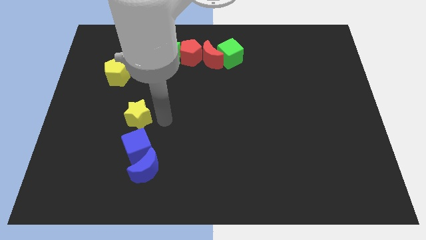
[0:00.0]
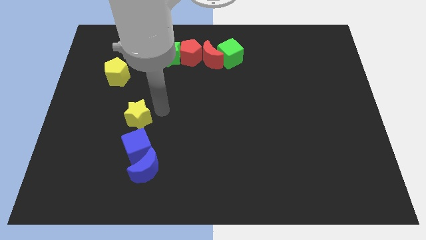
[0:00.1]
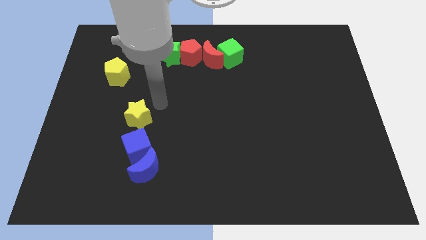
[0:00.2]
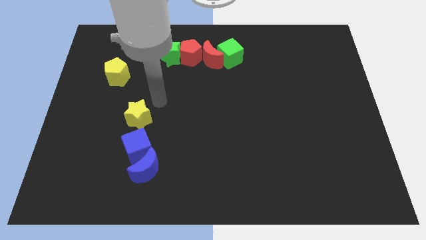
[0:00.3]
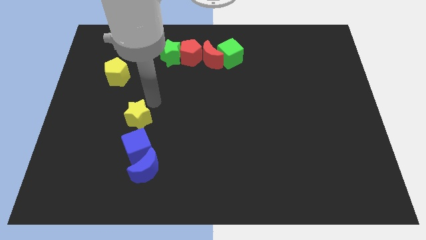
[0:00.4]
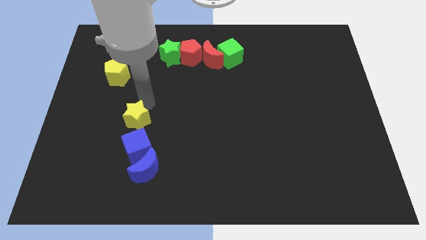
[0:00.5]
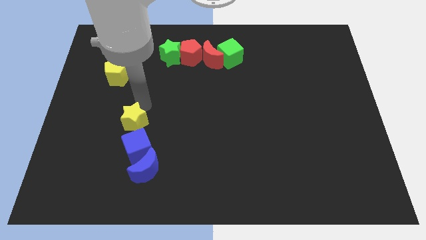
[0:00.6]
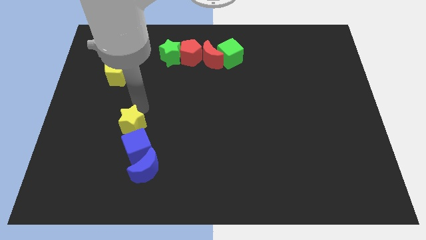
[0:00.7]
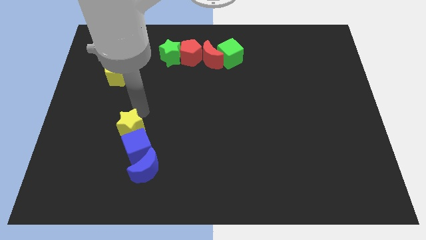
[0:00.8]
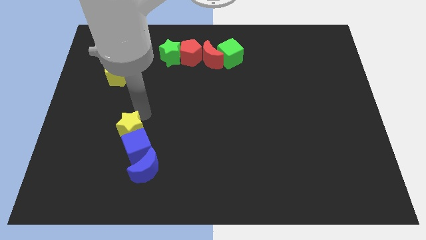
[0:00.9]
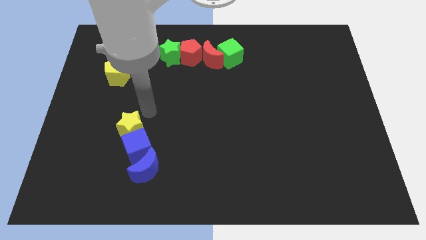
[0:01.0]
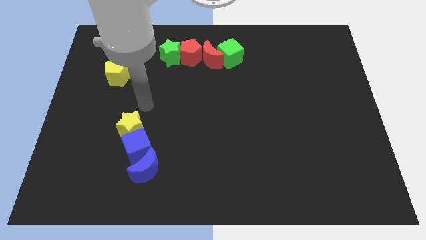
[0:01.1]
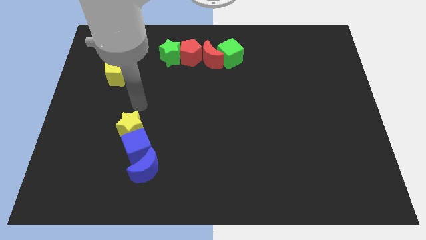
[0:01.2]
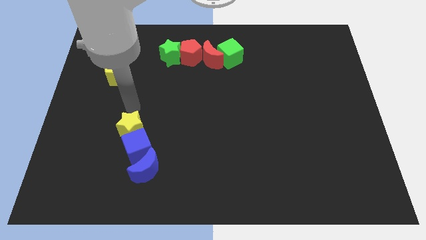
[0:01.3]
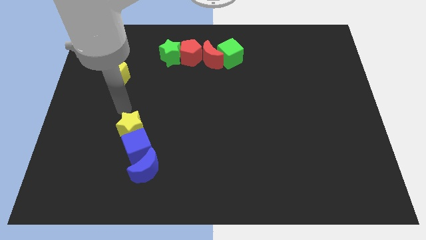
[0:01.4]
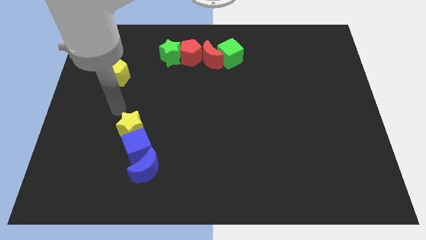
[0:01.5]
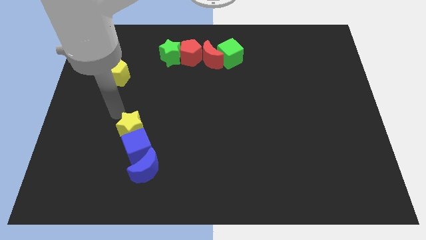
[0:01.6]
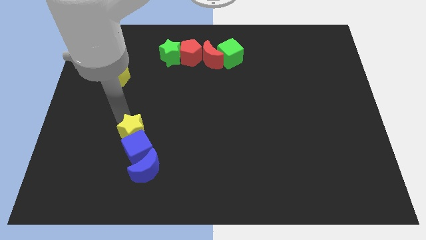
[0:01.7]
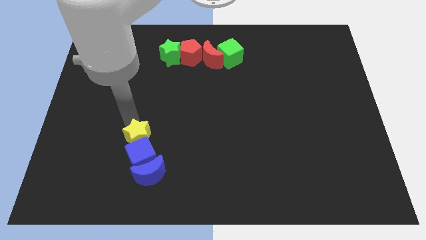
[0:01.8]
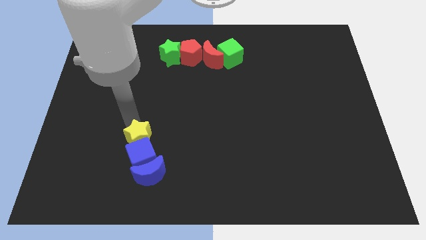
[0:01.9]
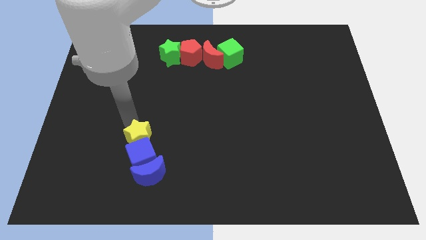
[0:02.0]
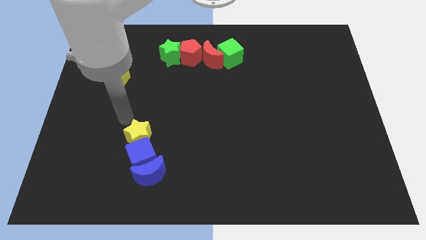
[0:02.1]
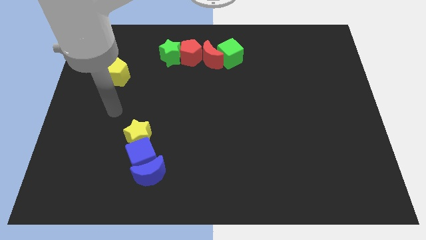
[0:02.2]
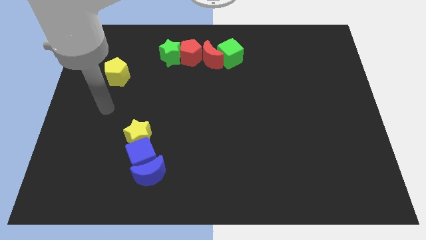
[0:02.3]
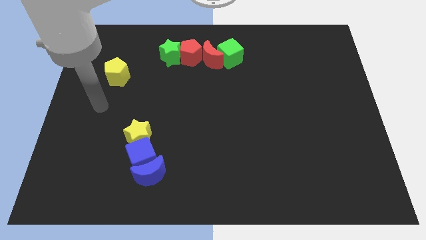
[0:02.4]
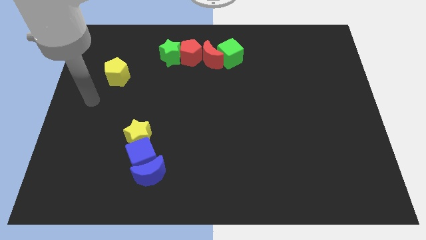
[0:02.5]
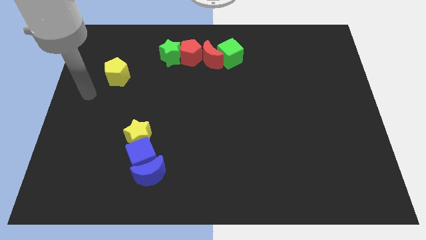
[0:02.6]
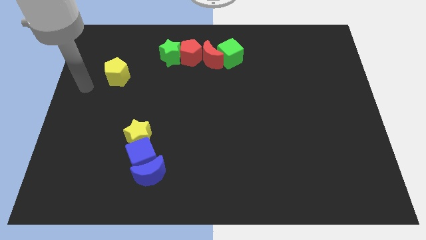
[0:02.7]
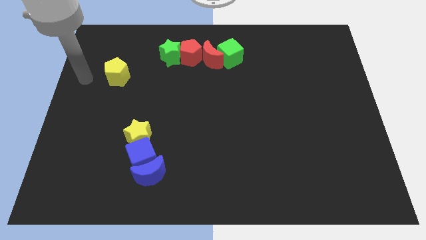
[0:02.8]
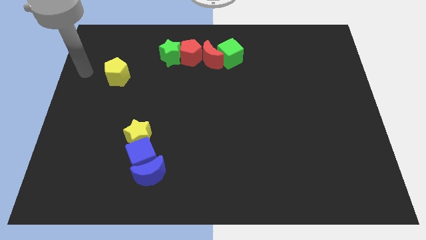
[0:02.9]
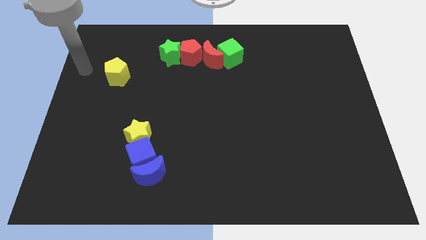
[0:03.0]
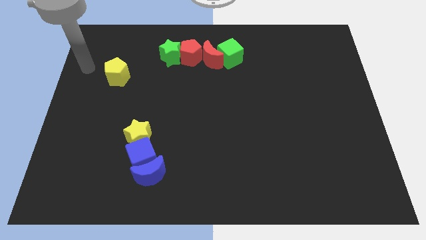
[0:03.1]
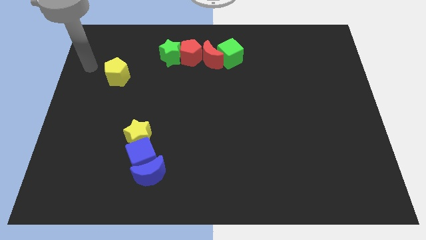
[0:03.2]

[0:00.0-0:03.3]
move the yellow star to the top of the blue cube

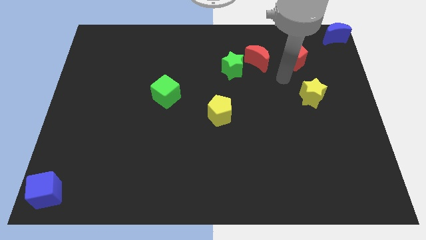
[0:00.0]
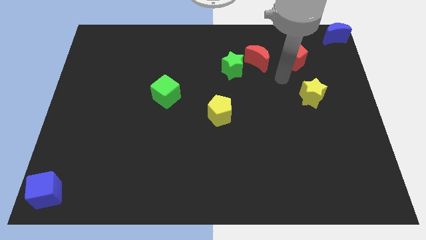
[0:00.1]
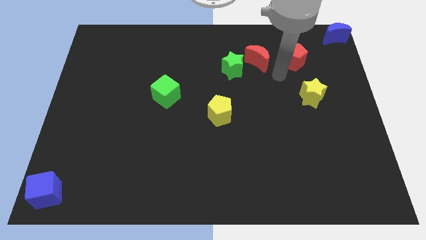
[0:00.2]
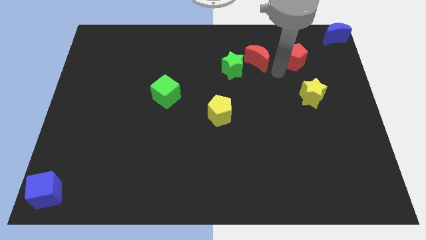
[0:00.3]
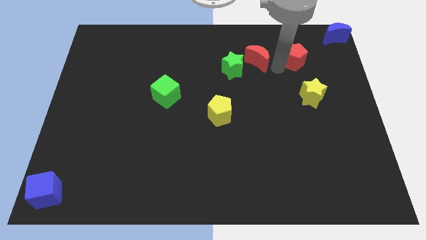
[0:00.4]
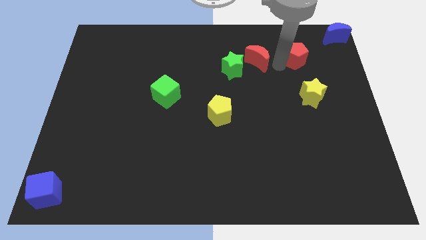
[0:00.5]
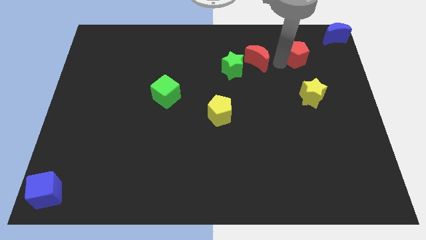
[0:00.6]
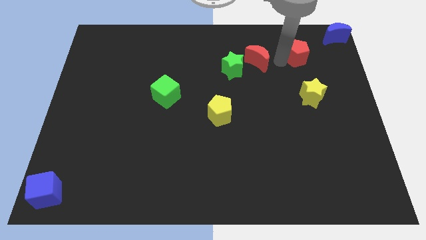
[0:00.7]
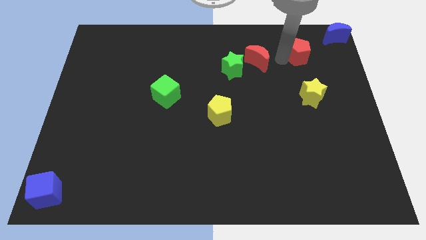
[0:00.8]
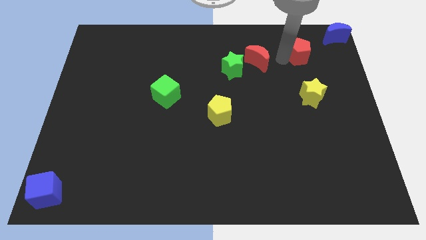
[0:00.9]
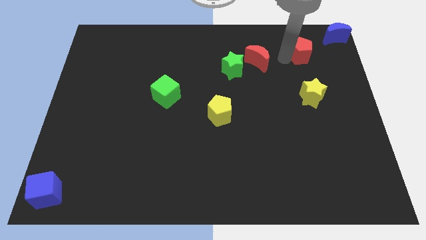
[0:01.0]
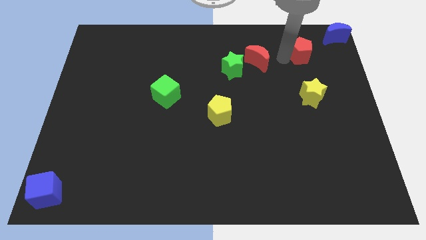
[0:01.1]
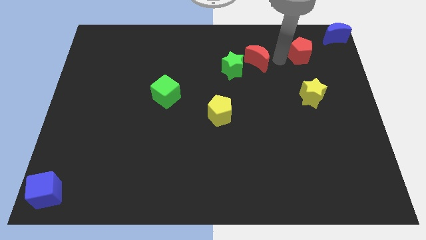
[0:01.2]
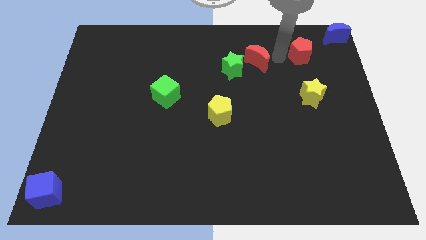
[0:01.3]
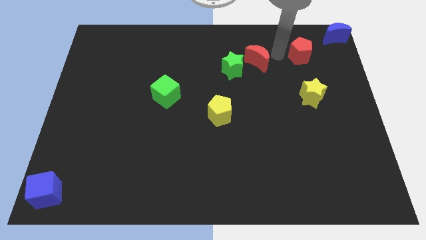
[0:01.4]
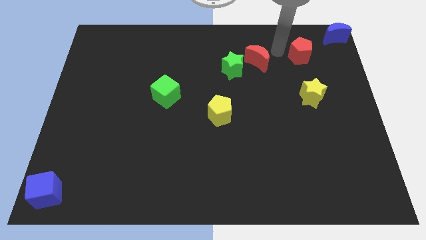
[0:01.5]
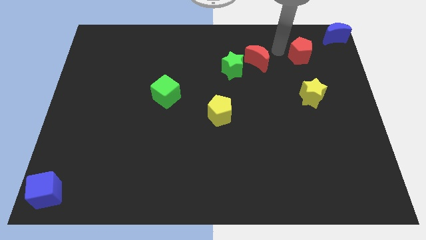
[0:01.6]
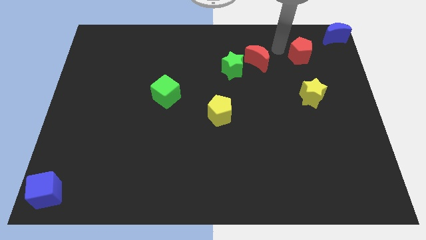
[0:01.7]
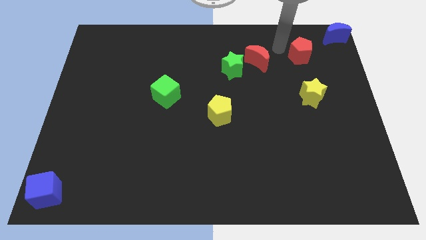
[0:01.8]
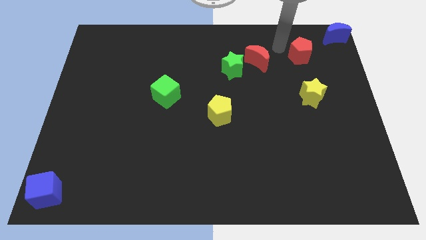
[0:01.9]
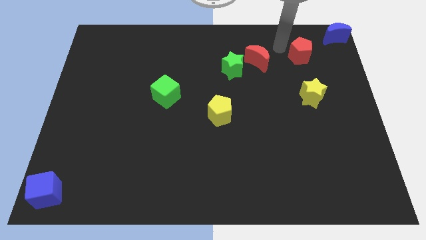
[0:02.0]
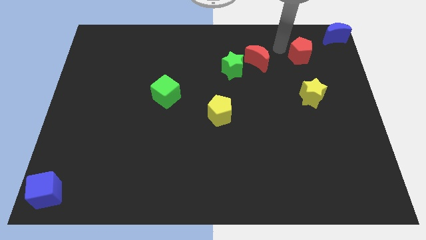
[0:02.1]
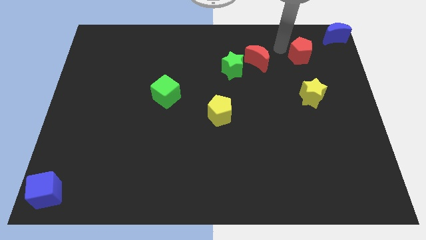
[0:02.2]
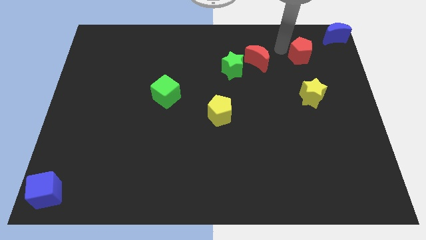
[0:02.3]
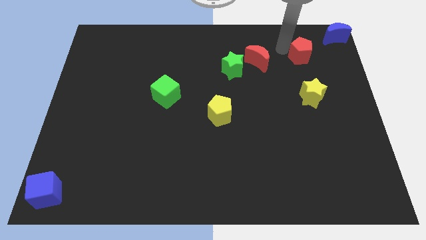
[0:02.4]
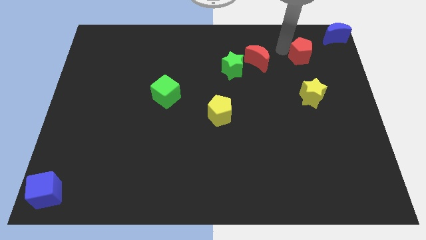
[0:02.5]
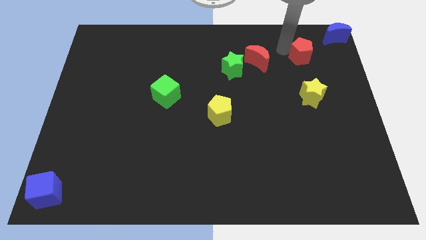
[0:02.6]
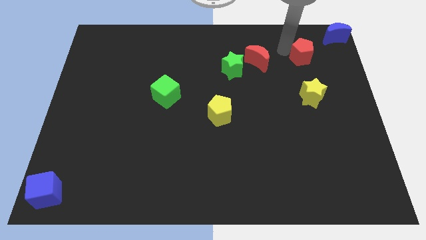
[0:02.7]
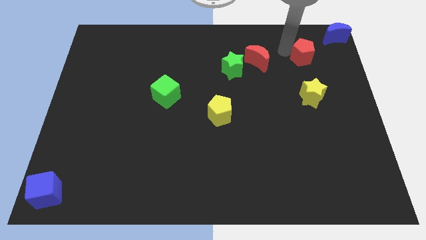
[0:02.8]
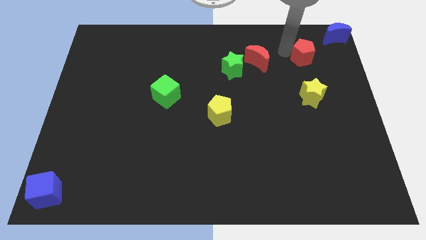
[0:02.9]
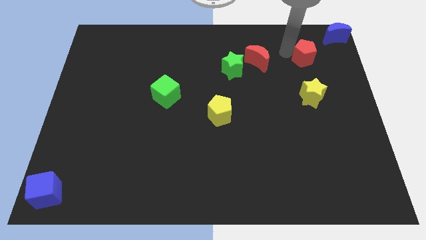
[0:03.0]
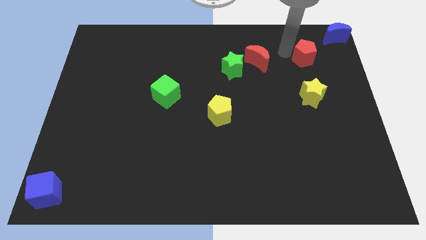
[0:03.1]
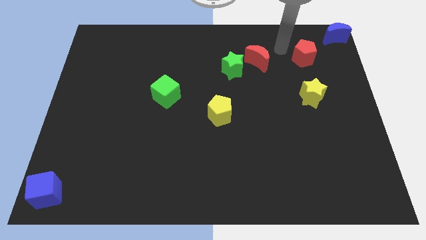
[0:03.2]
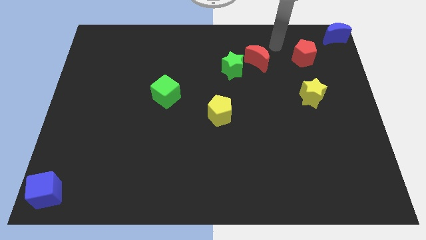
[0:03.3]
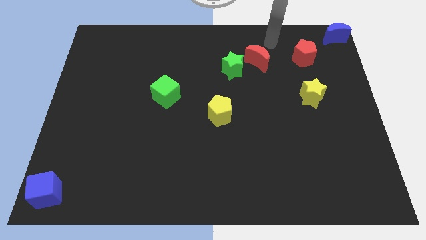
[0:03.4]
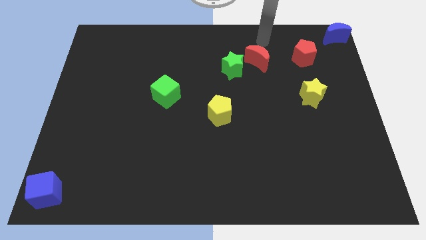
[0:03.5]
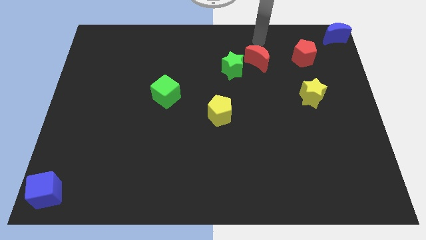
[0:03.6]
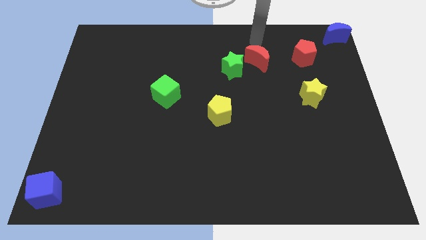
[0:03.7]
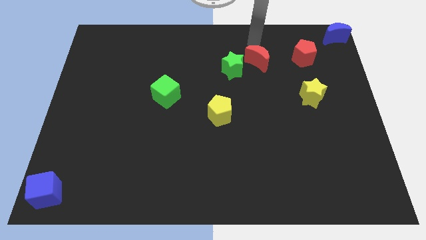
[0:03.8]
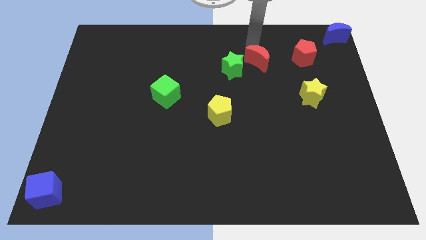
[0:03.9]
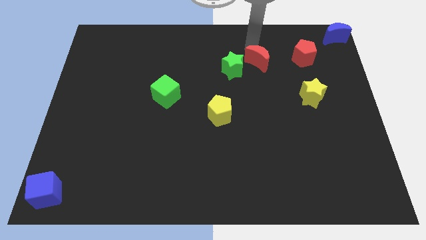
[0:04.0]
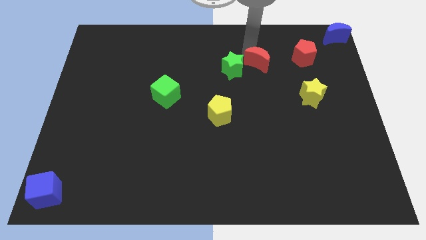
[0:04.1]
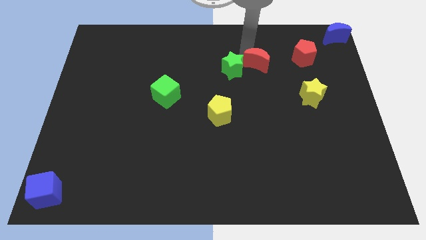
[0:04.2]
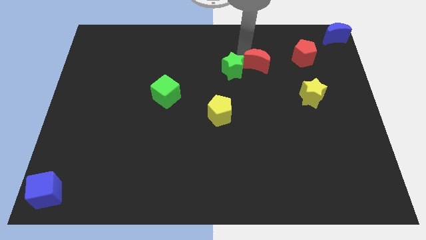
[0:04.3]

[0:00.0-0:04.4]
place red pentagon parallel to yellow star

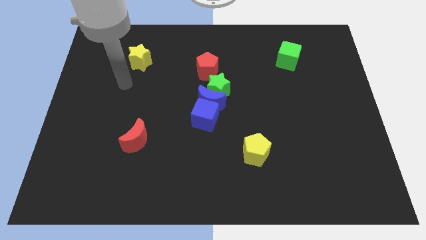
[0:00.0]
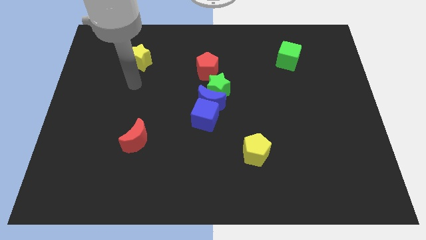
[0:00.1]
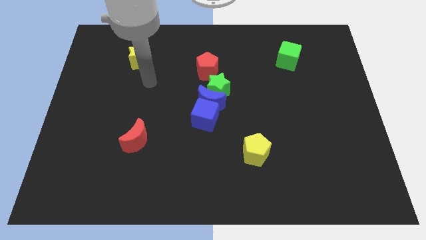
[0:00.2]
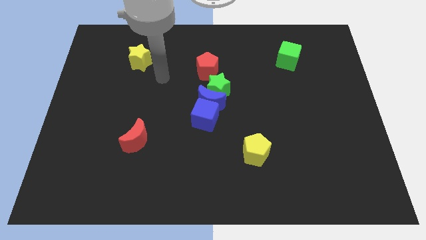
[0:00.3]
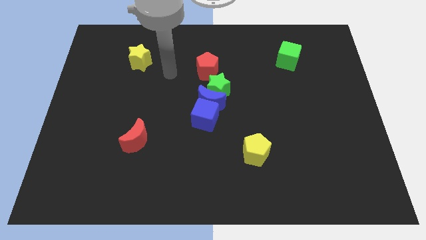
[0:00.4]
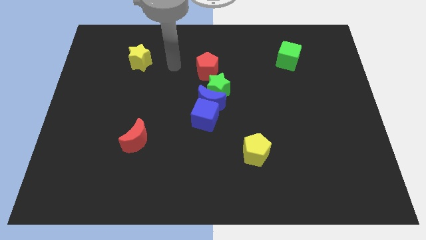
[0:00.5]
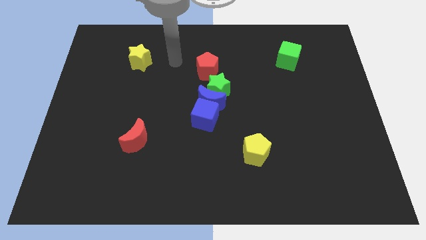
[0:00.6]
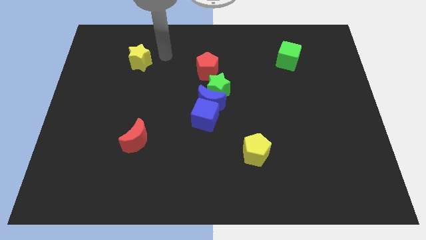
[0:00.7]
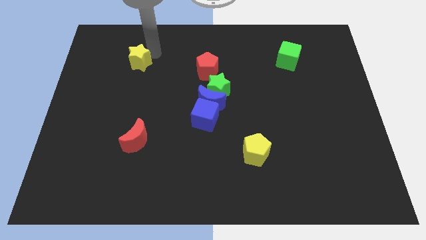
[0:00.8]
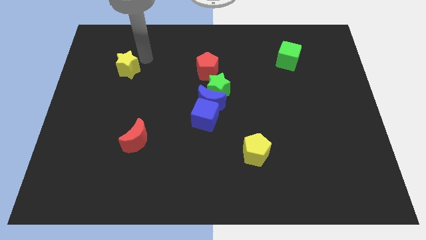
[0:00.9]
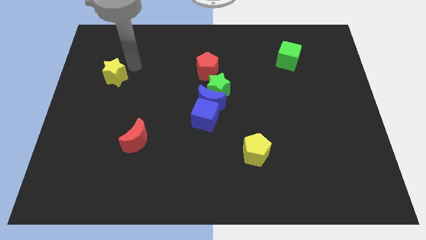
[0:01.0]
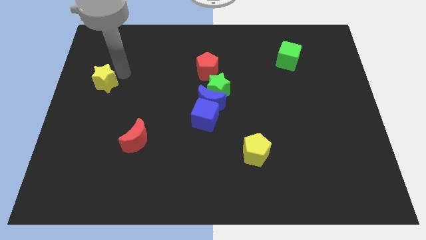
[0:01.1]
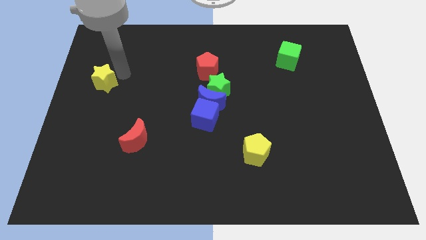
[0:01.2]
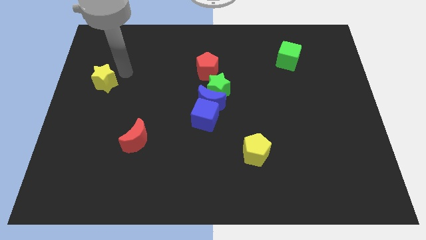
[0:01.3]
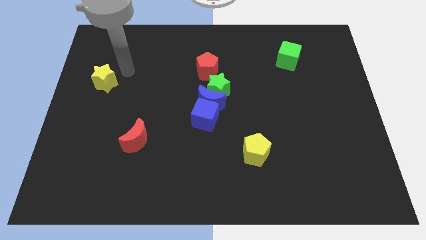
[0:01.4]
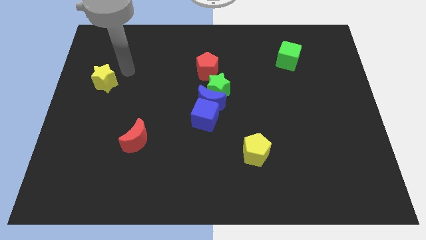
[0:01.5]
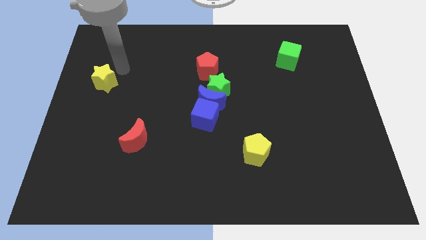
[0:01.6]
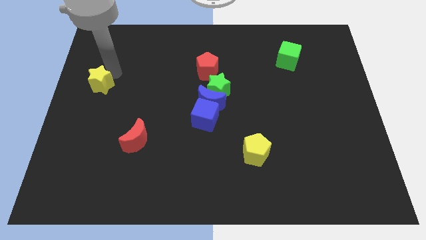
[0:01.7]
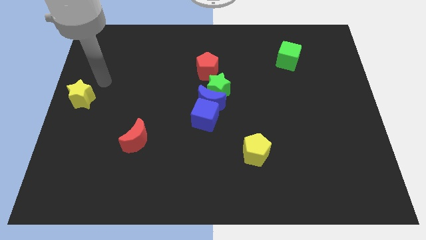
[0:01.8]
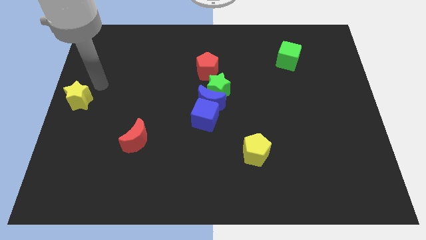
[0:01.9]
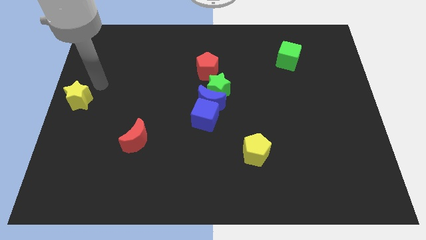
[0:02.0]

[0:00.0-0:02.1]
move the yellow star towards the center left of the board
